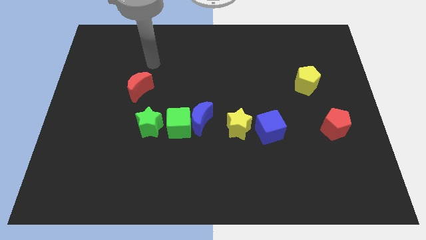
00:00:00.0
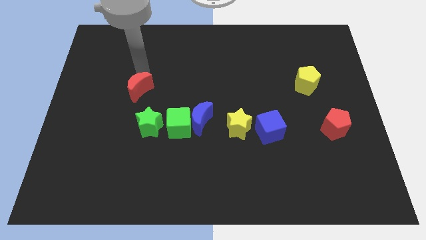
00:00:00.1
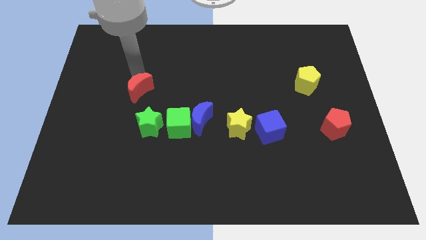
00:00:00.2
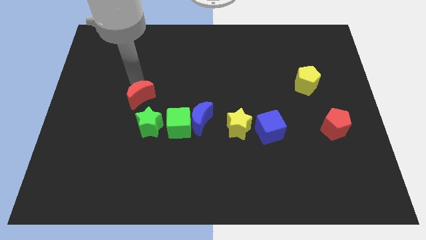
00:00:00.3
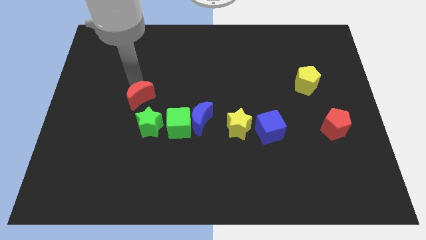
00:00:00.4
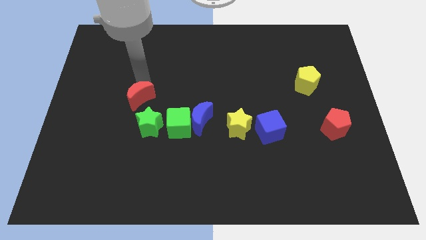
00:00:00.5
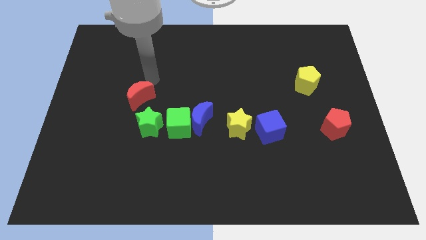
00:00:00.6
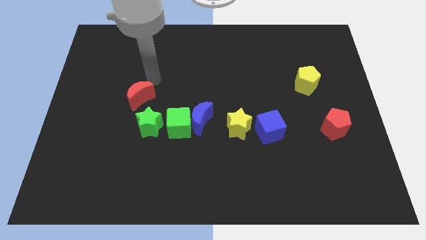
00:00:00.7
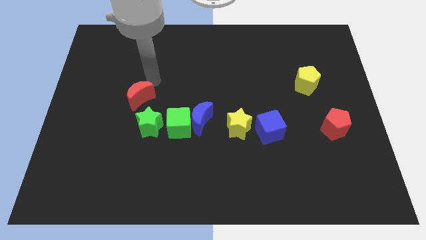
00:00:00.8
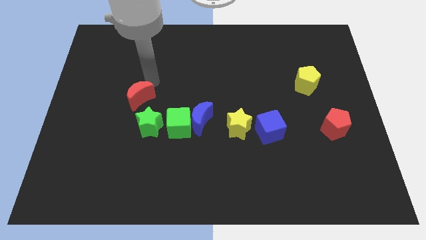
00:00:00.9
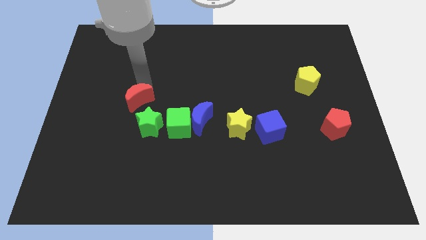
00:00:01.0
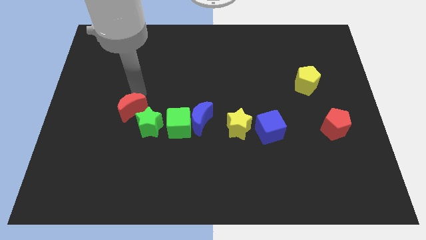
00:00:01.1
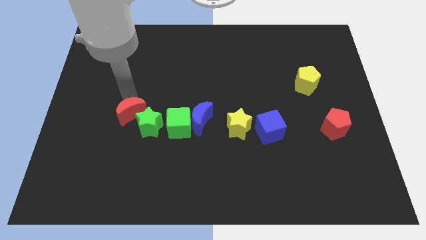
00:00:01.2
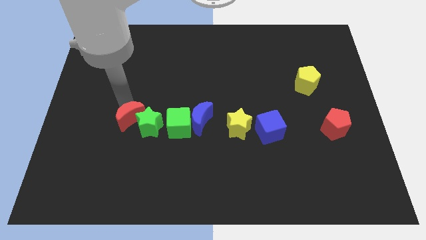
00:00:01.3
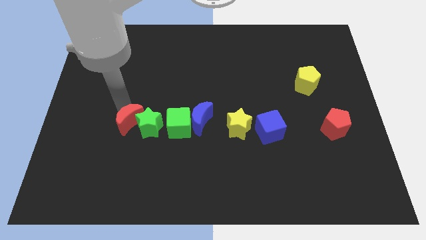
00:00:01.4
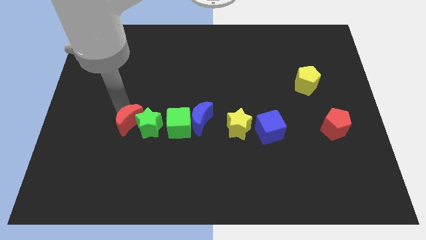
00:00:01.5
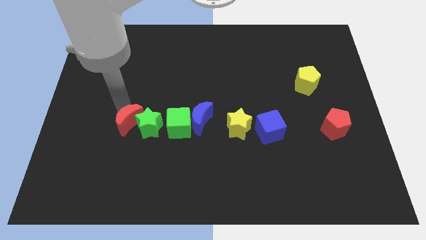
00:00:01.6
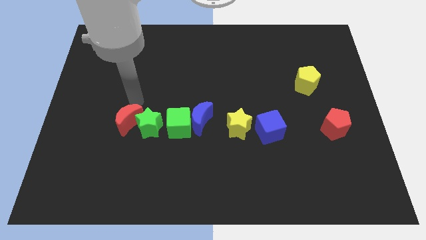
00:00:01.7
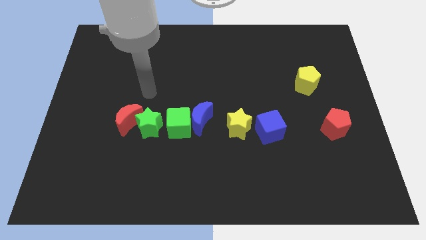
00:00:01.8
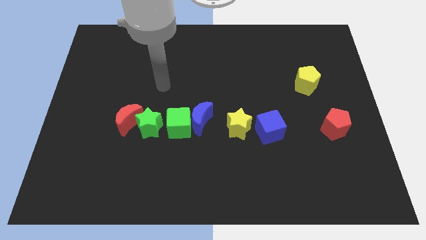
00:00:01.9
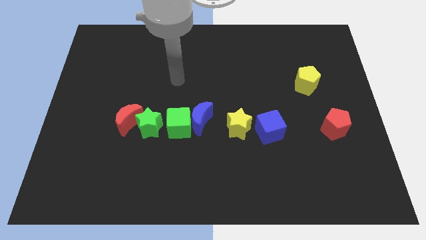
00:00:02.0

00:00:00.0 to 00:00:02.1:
move the red crescent to the left side of the green star

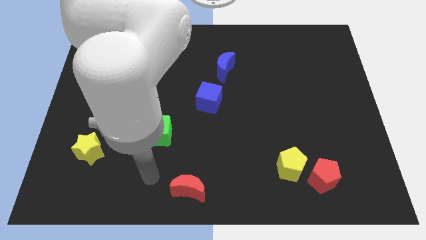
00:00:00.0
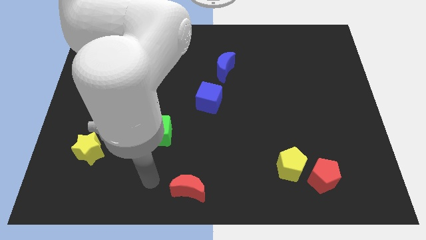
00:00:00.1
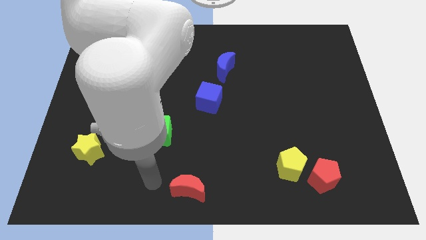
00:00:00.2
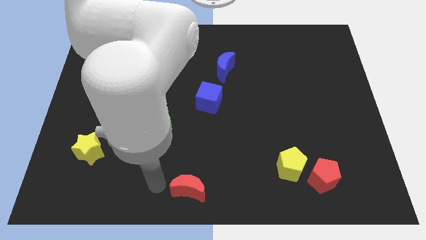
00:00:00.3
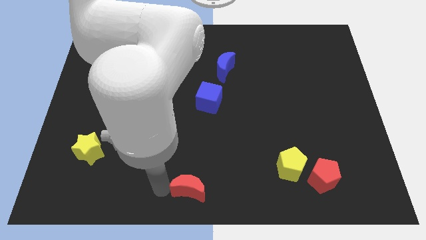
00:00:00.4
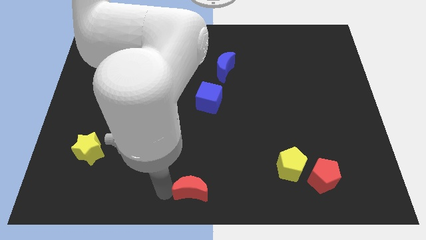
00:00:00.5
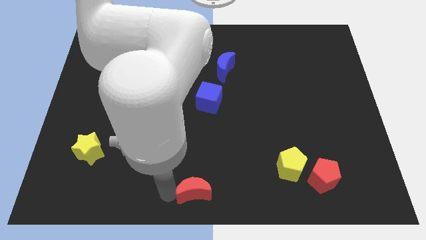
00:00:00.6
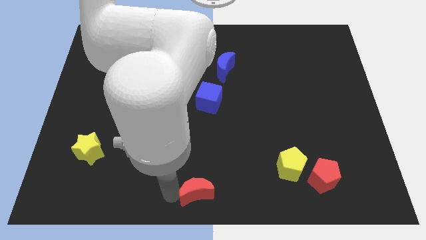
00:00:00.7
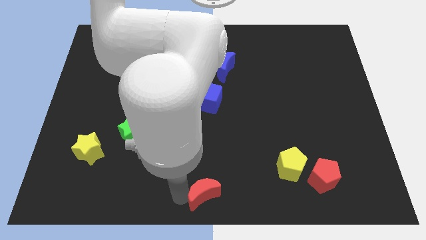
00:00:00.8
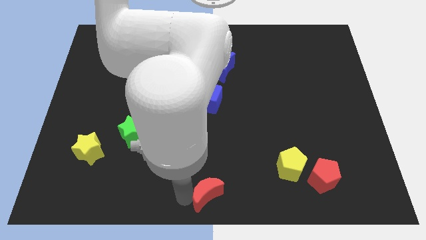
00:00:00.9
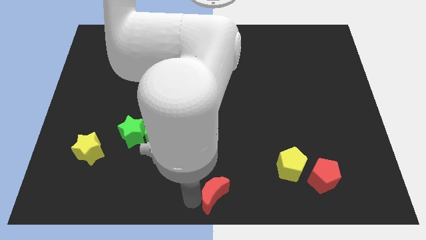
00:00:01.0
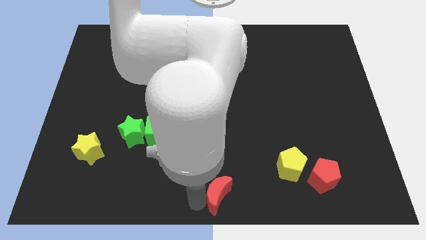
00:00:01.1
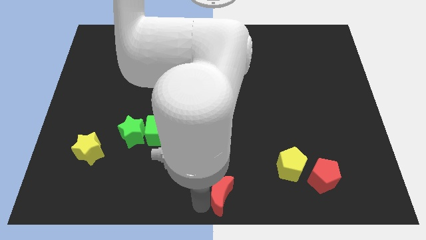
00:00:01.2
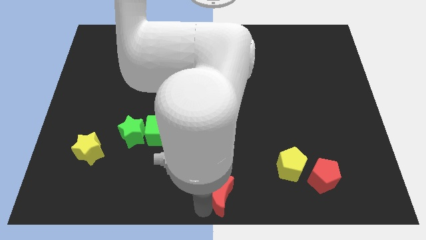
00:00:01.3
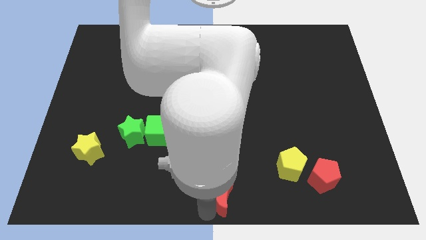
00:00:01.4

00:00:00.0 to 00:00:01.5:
move the red crescent to the bottom center of the board

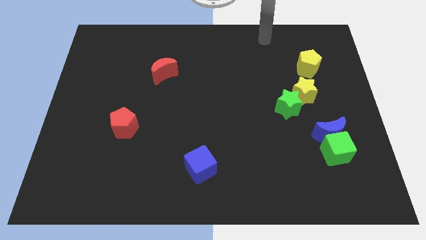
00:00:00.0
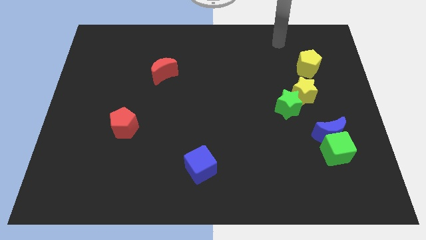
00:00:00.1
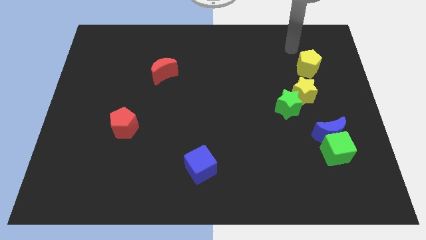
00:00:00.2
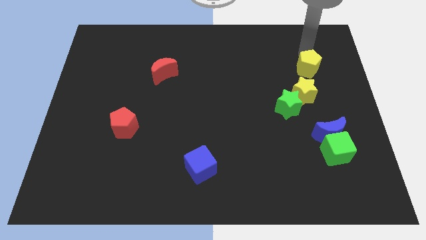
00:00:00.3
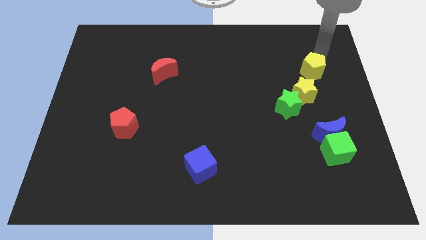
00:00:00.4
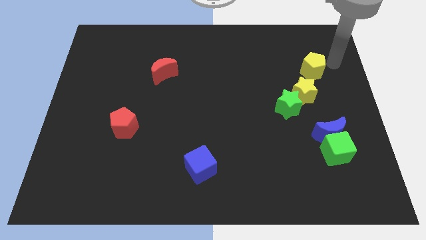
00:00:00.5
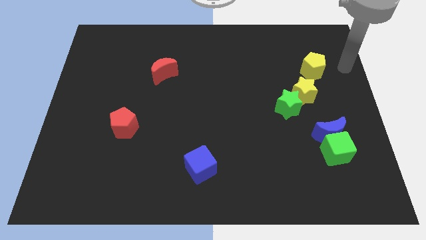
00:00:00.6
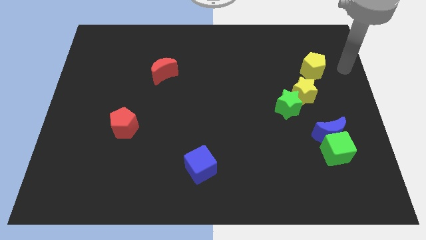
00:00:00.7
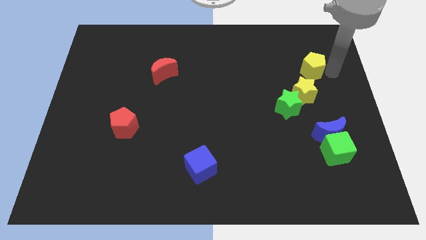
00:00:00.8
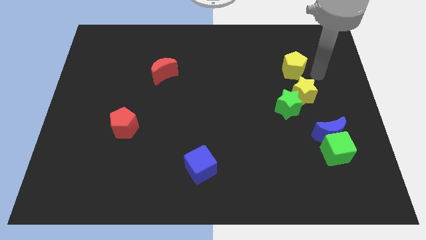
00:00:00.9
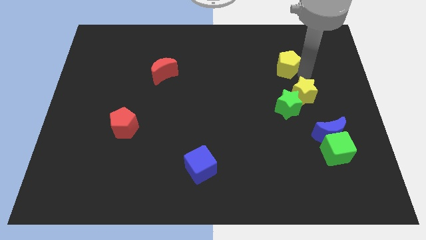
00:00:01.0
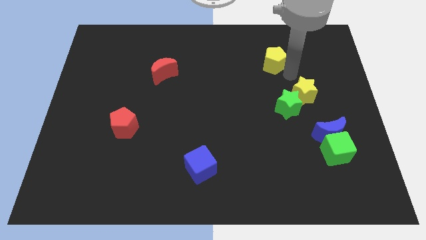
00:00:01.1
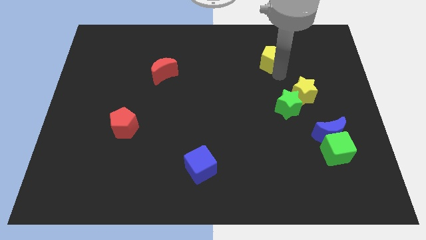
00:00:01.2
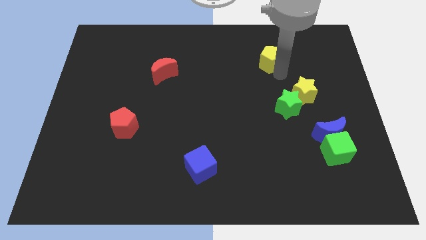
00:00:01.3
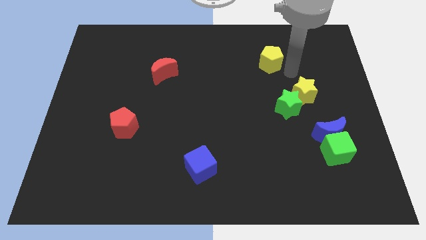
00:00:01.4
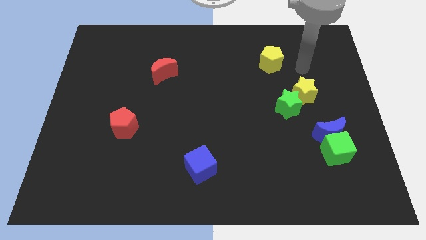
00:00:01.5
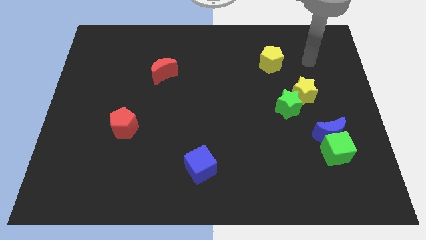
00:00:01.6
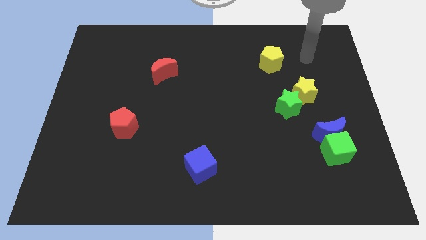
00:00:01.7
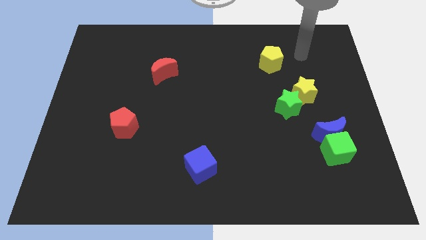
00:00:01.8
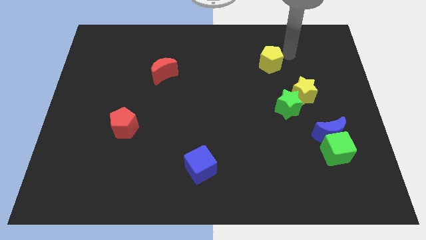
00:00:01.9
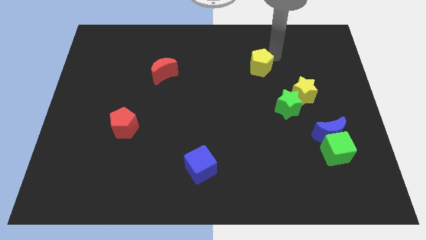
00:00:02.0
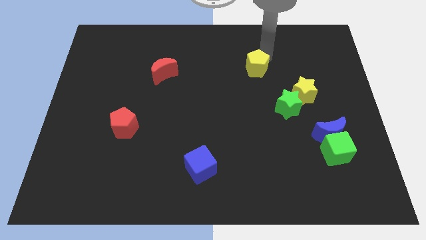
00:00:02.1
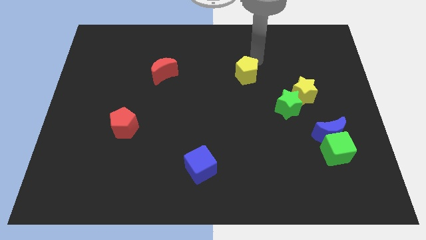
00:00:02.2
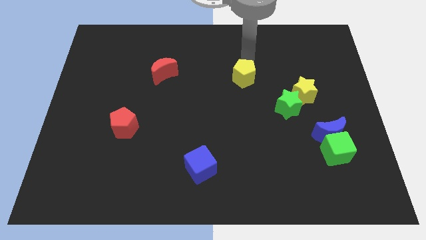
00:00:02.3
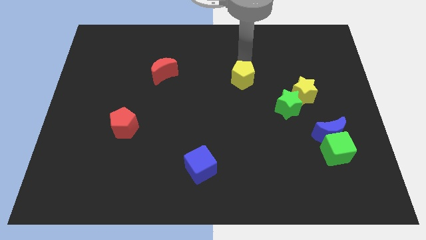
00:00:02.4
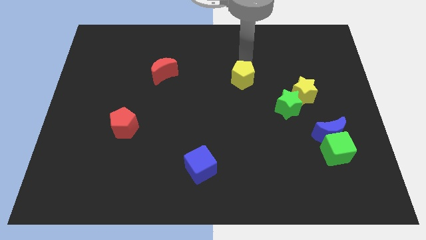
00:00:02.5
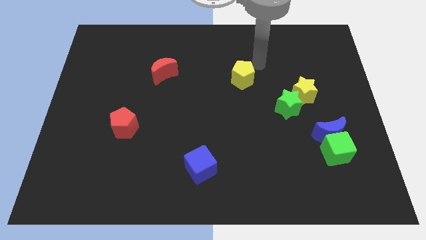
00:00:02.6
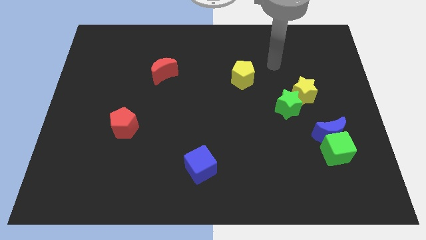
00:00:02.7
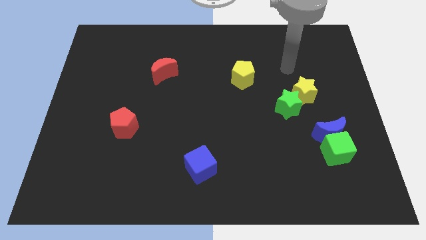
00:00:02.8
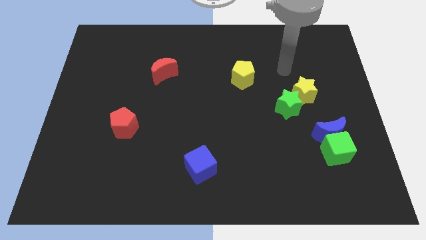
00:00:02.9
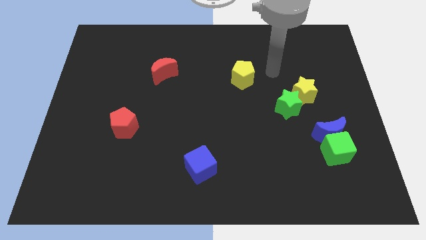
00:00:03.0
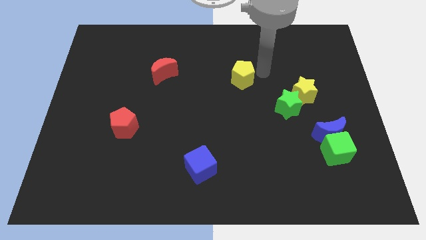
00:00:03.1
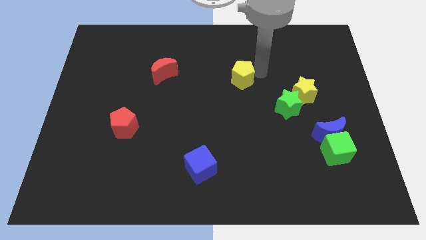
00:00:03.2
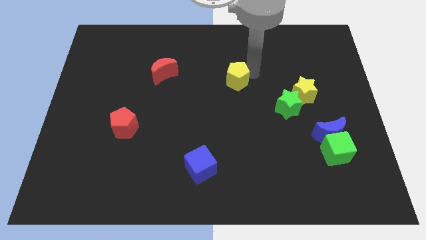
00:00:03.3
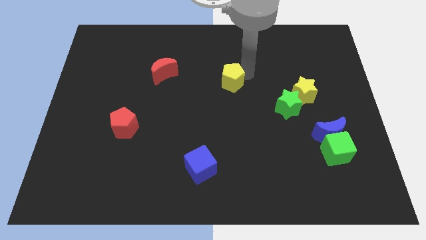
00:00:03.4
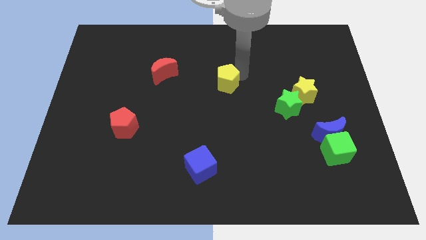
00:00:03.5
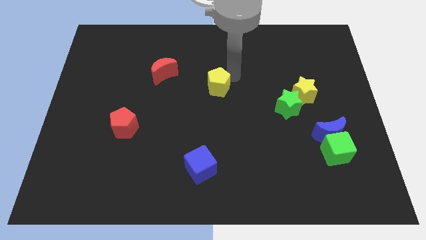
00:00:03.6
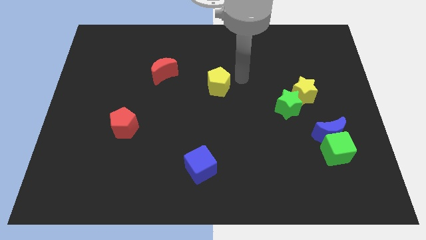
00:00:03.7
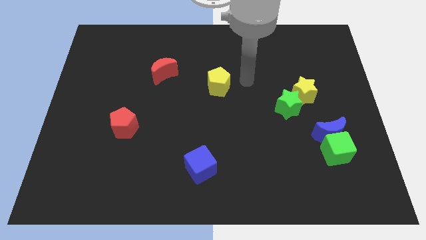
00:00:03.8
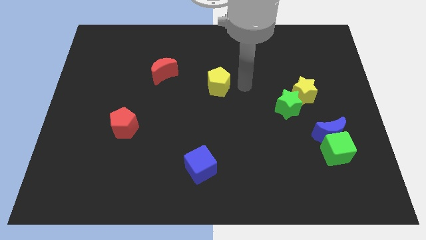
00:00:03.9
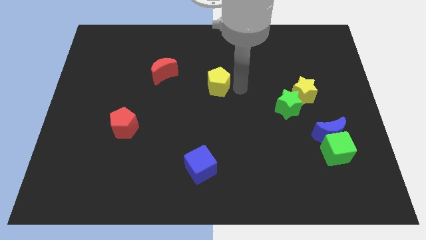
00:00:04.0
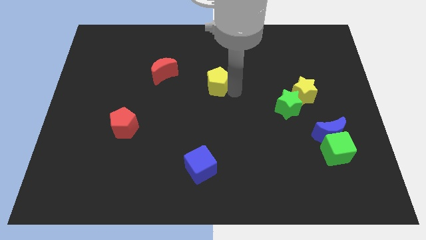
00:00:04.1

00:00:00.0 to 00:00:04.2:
push the yellow pentagon to the center of the board

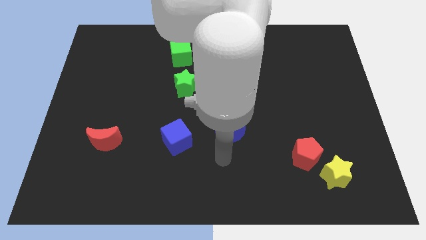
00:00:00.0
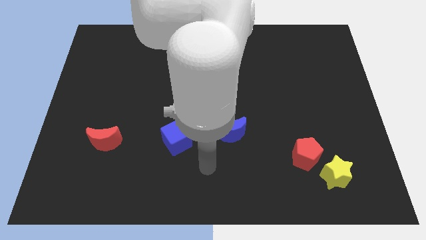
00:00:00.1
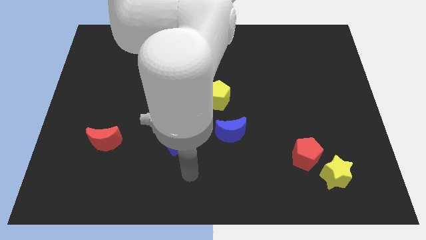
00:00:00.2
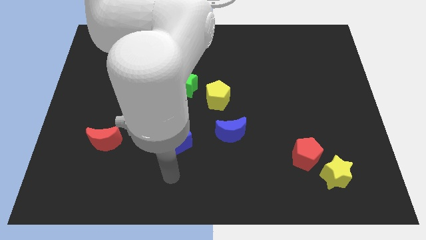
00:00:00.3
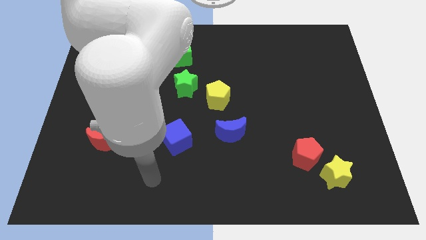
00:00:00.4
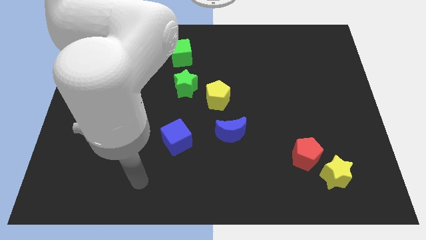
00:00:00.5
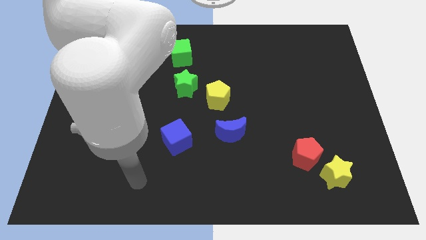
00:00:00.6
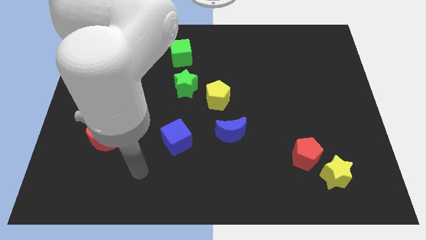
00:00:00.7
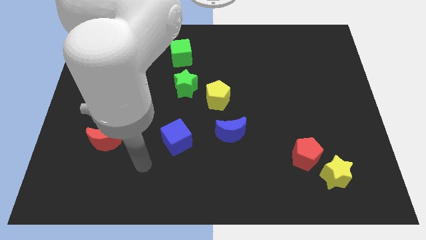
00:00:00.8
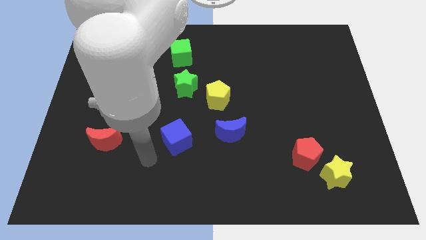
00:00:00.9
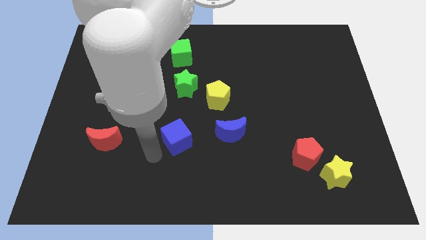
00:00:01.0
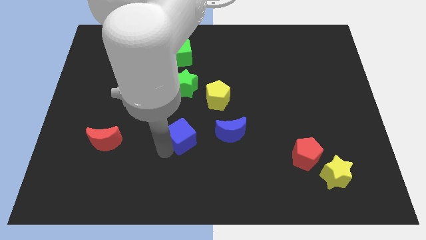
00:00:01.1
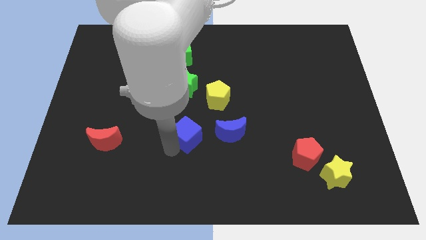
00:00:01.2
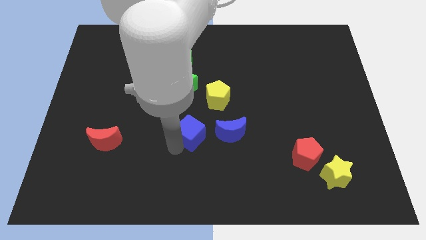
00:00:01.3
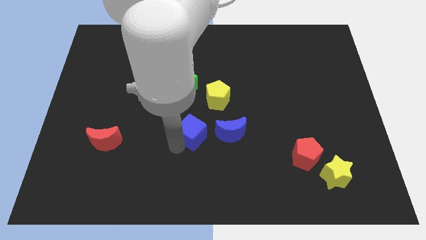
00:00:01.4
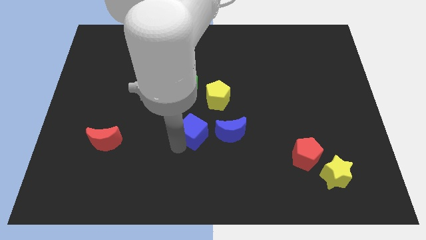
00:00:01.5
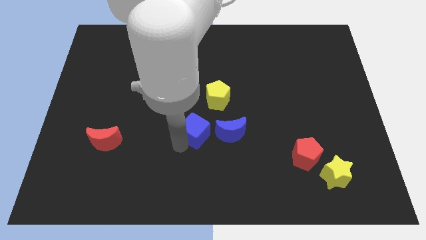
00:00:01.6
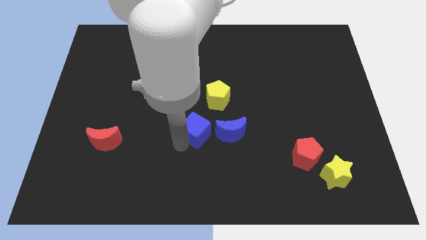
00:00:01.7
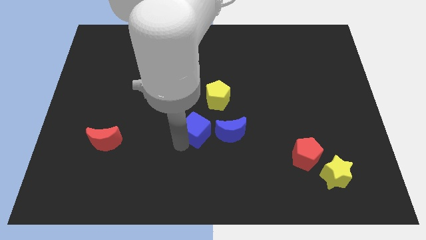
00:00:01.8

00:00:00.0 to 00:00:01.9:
push the blue cube to the left of the blue crescent
